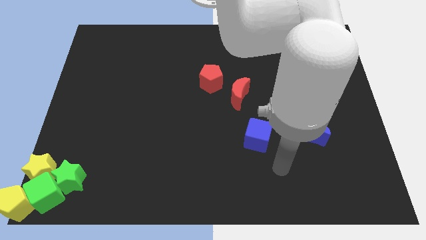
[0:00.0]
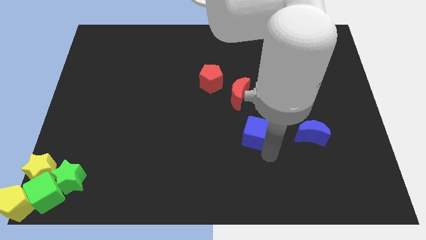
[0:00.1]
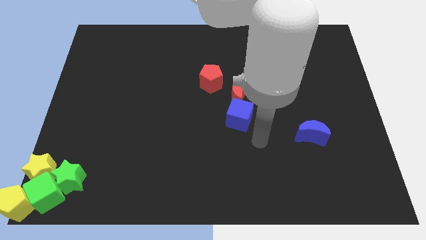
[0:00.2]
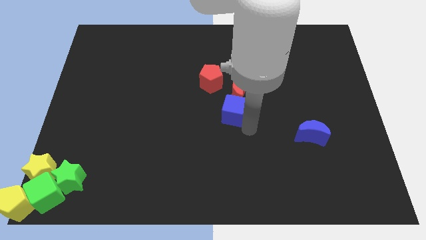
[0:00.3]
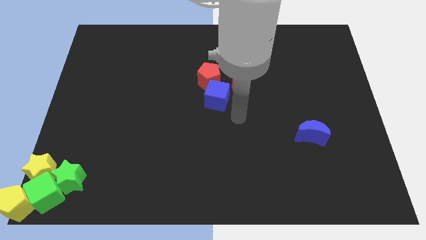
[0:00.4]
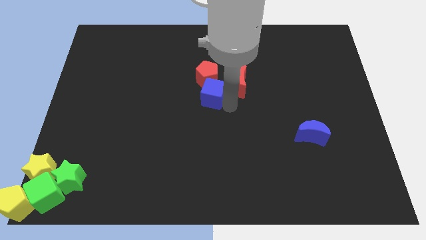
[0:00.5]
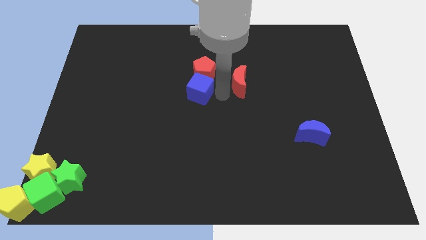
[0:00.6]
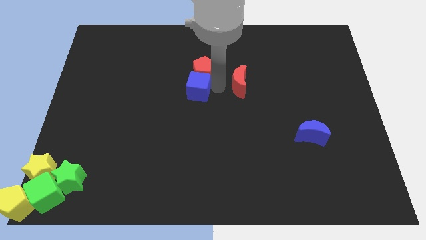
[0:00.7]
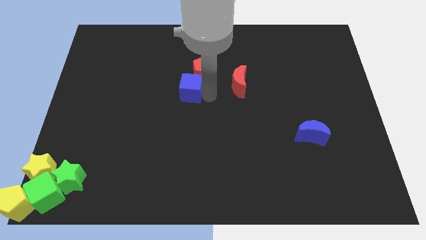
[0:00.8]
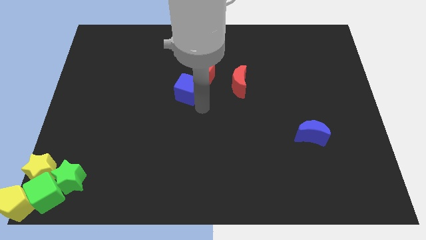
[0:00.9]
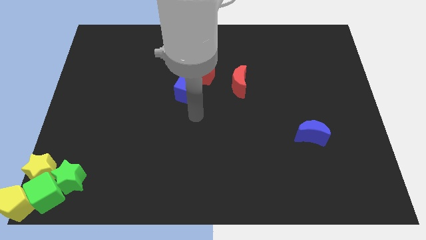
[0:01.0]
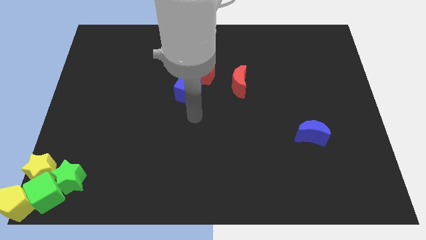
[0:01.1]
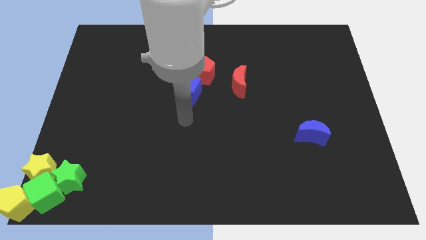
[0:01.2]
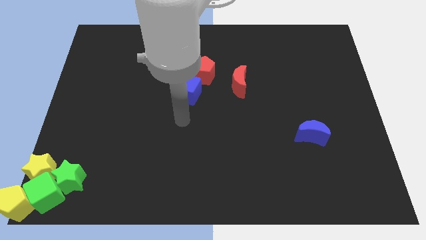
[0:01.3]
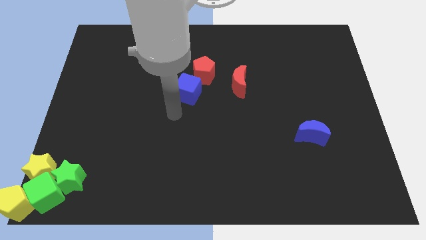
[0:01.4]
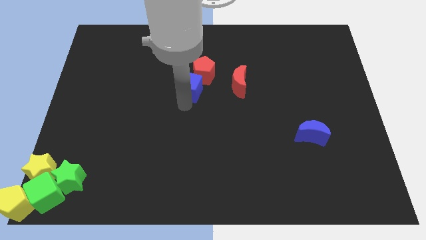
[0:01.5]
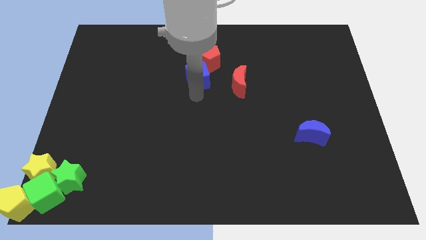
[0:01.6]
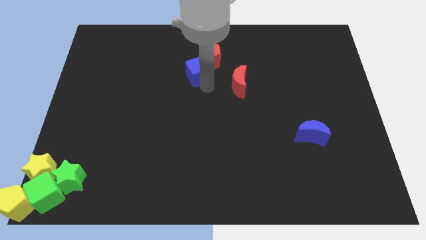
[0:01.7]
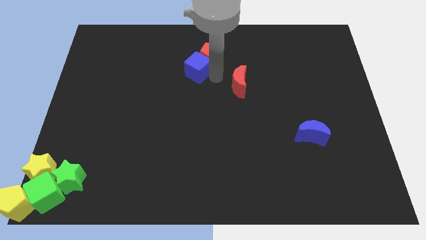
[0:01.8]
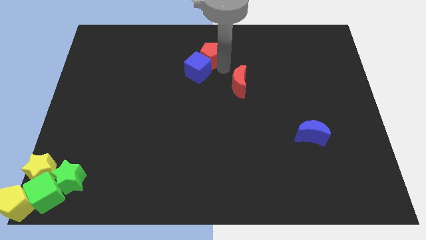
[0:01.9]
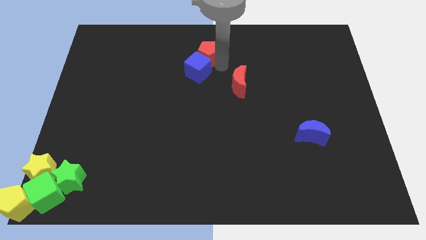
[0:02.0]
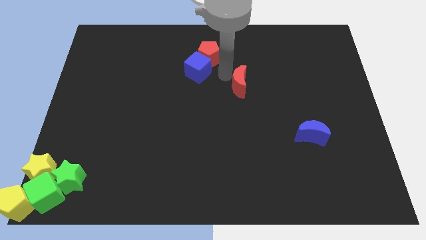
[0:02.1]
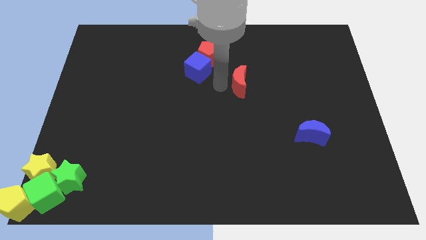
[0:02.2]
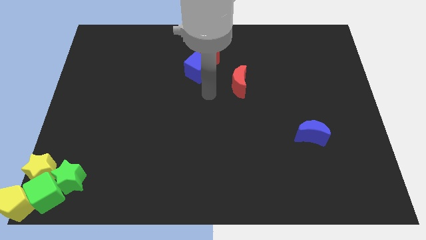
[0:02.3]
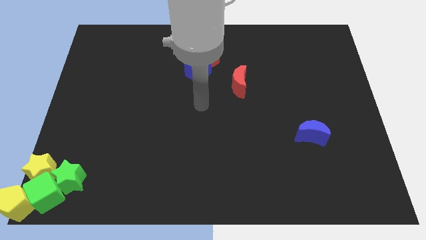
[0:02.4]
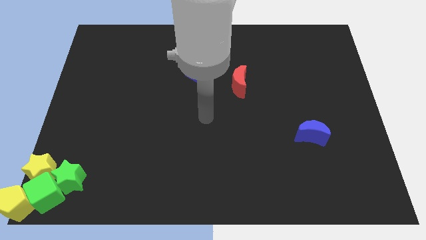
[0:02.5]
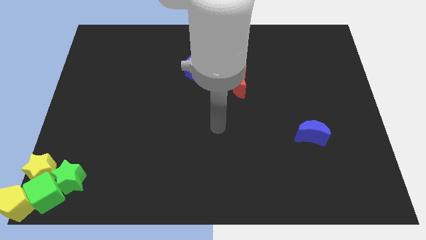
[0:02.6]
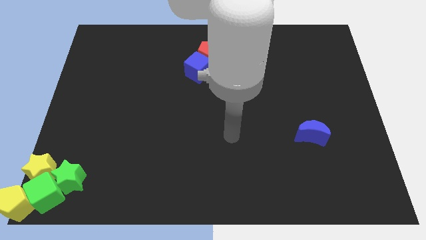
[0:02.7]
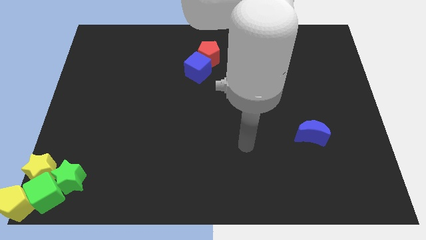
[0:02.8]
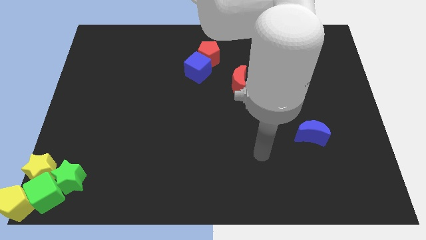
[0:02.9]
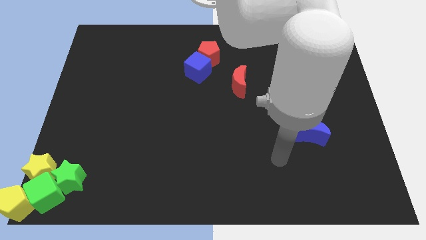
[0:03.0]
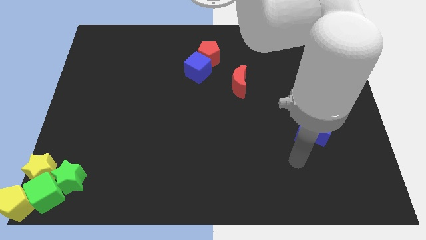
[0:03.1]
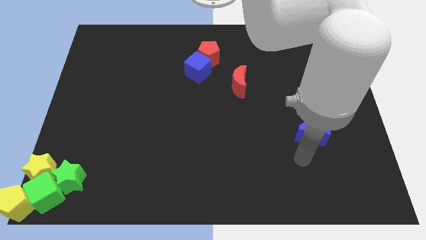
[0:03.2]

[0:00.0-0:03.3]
align blue cube and red pentagon towards top center

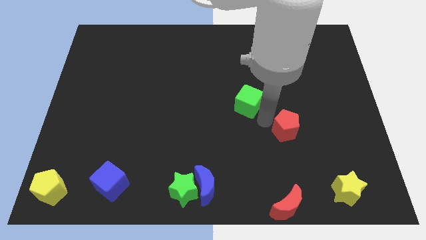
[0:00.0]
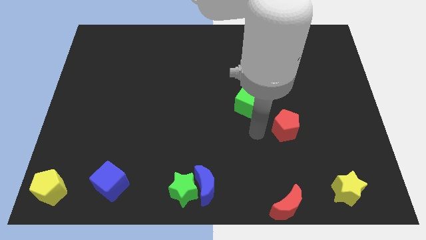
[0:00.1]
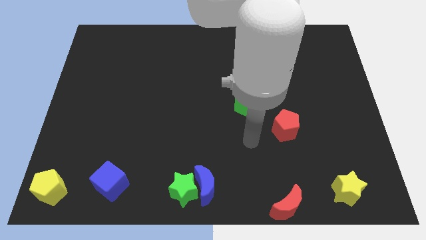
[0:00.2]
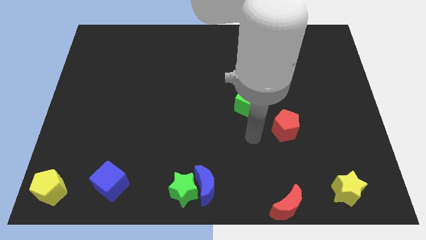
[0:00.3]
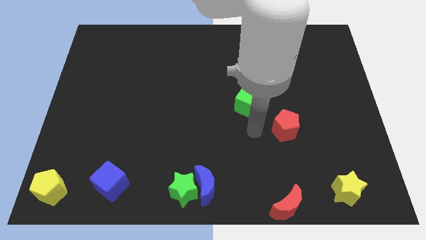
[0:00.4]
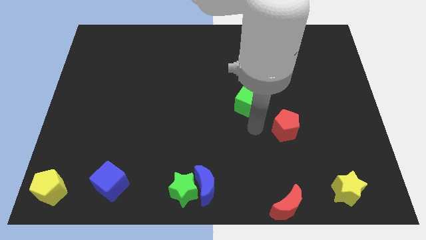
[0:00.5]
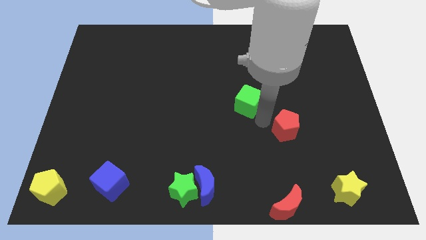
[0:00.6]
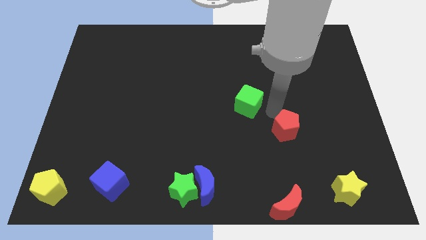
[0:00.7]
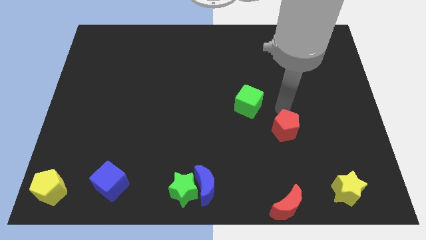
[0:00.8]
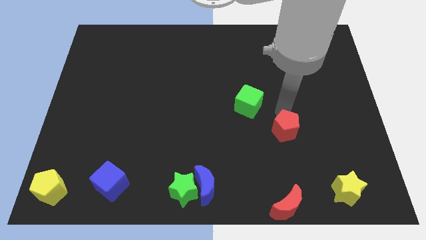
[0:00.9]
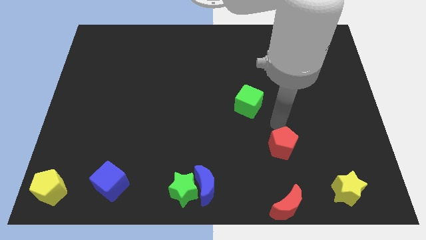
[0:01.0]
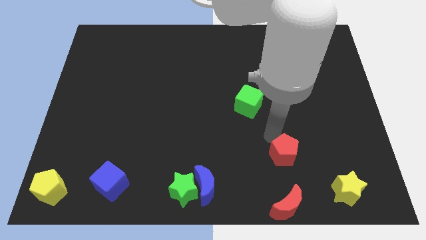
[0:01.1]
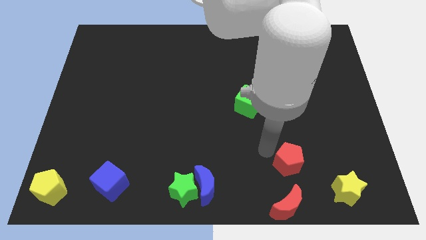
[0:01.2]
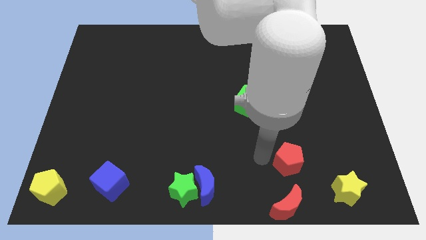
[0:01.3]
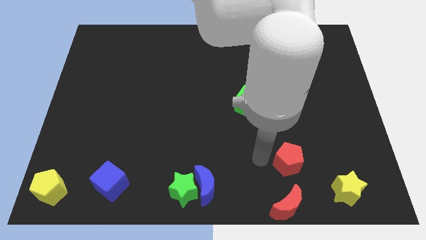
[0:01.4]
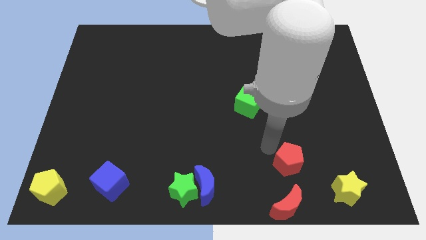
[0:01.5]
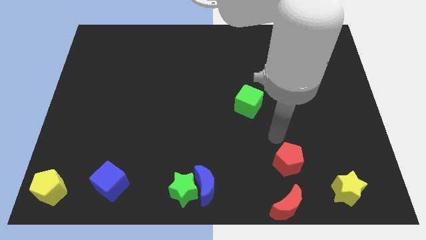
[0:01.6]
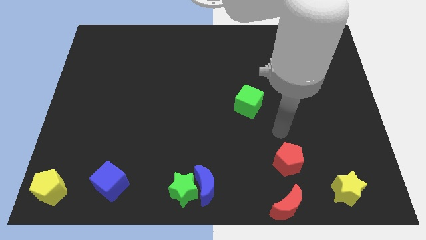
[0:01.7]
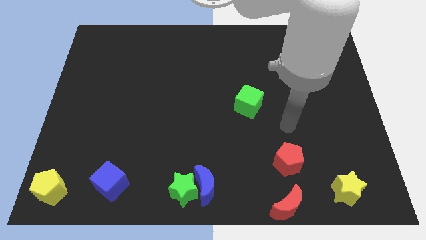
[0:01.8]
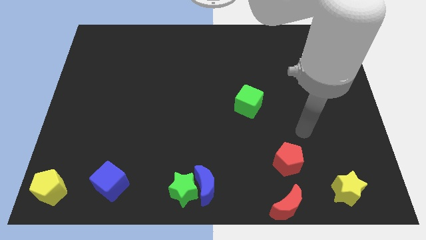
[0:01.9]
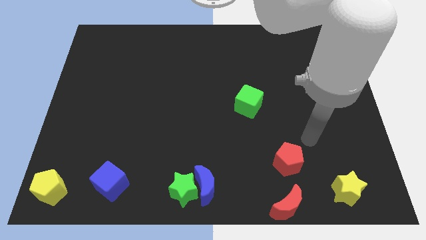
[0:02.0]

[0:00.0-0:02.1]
push red pentagon on top of red moon

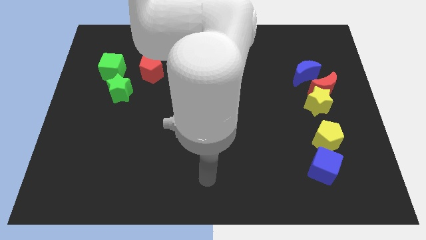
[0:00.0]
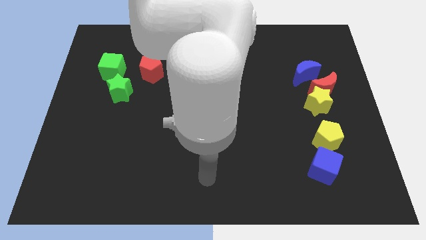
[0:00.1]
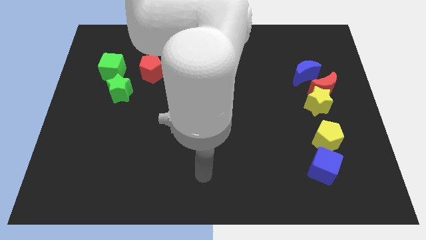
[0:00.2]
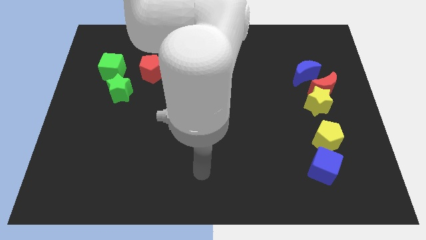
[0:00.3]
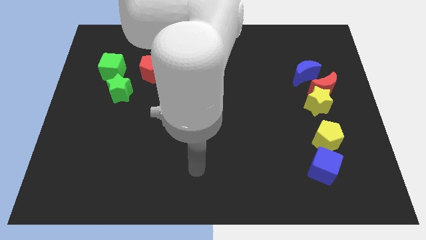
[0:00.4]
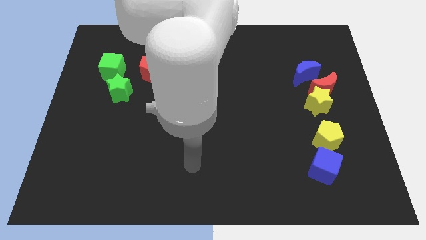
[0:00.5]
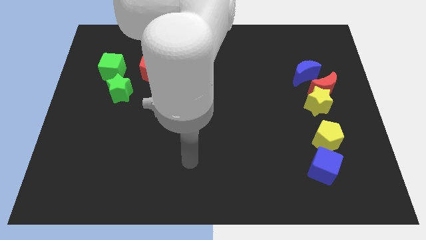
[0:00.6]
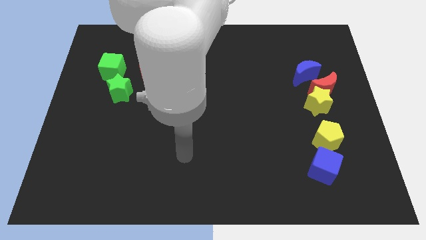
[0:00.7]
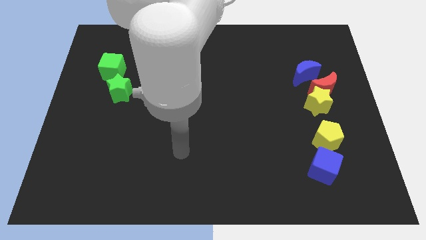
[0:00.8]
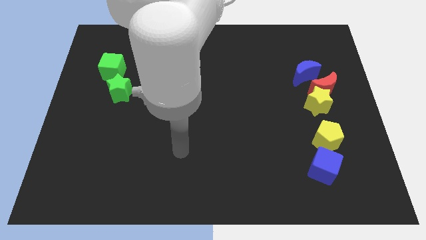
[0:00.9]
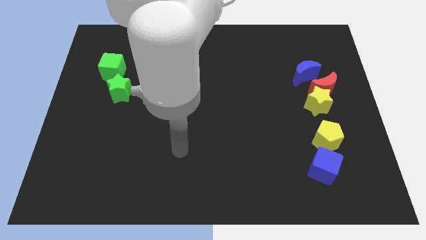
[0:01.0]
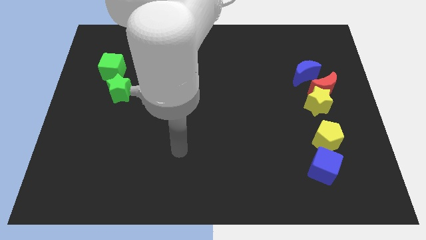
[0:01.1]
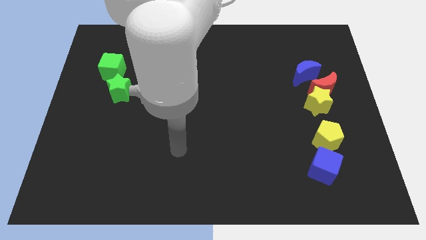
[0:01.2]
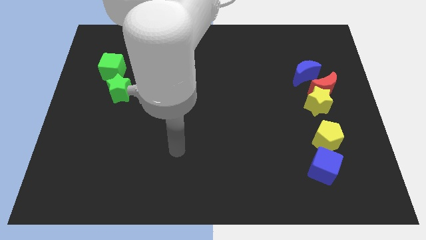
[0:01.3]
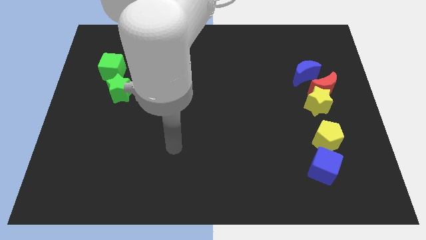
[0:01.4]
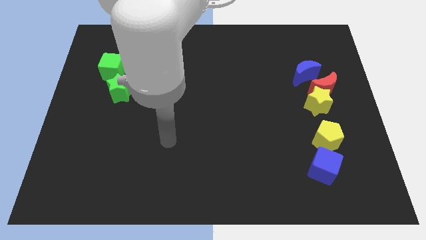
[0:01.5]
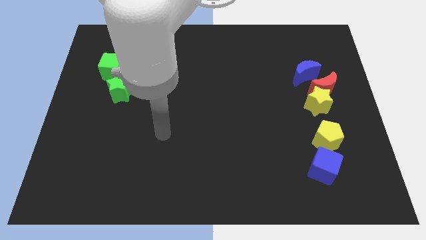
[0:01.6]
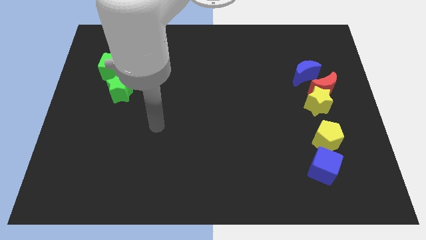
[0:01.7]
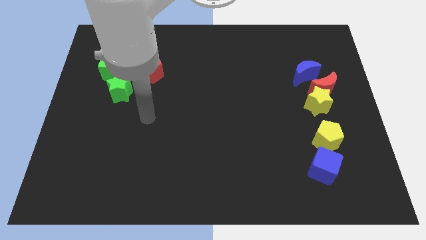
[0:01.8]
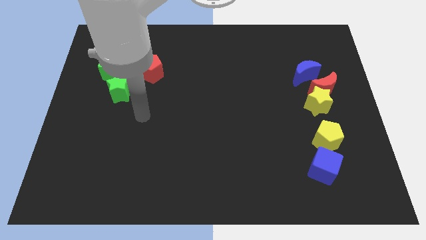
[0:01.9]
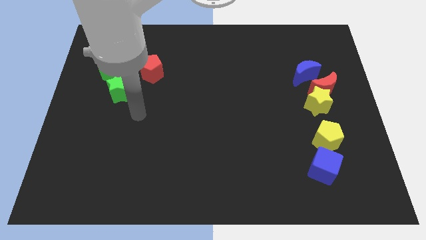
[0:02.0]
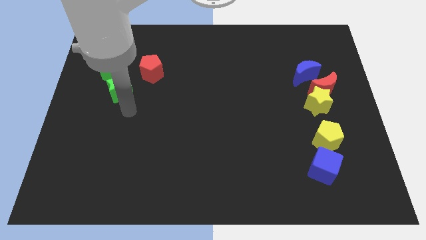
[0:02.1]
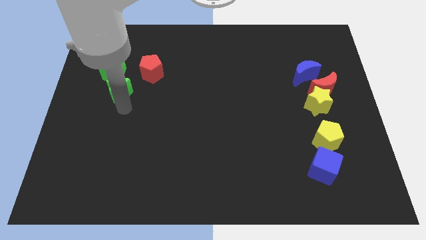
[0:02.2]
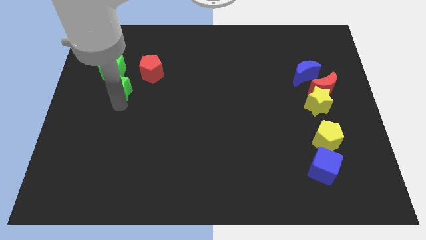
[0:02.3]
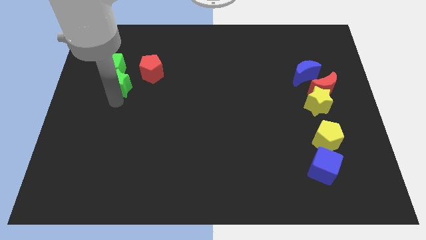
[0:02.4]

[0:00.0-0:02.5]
touch the green star with your arm

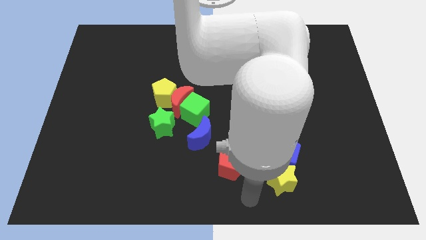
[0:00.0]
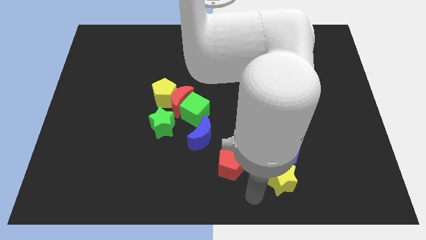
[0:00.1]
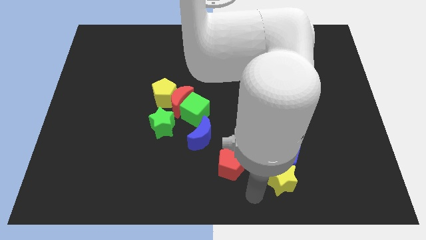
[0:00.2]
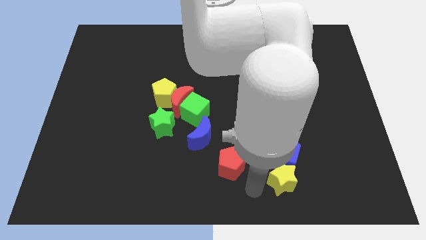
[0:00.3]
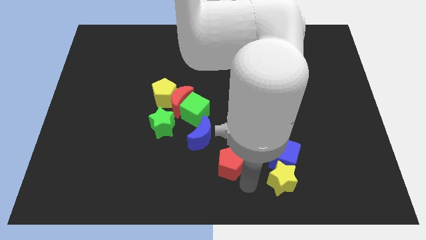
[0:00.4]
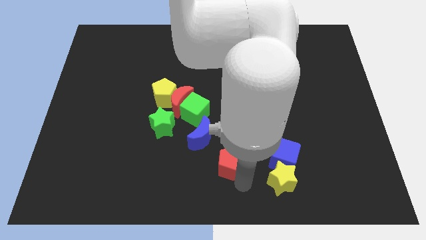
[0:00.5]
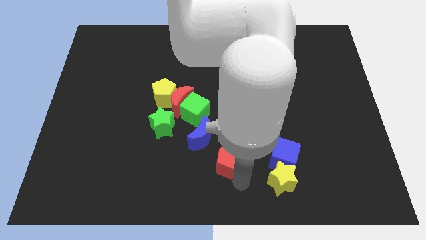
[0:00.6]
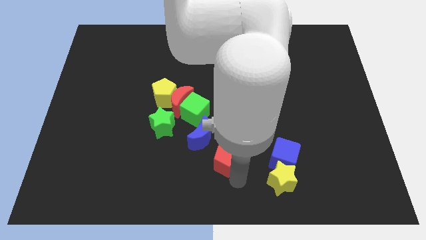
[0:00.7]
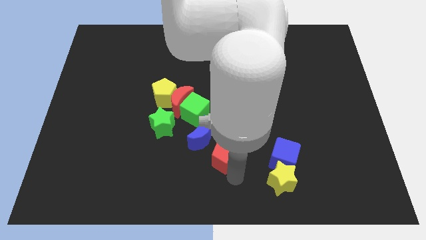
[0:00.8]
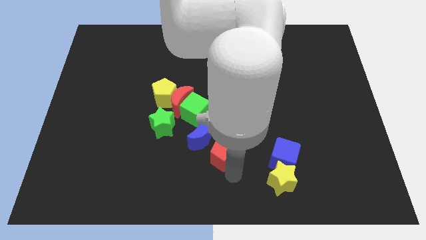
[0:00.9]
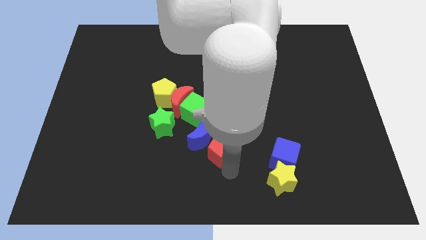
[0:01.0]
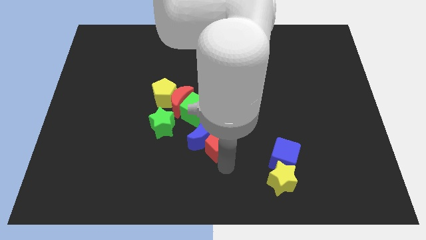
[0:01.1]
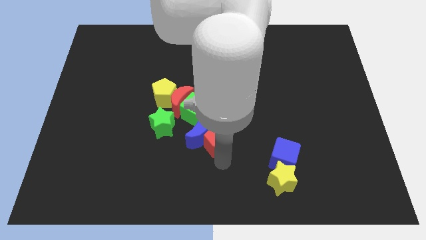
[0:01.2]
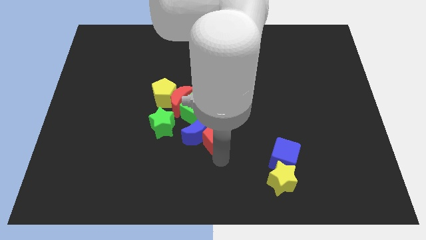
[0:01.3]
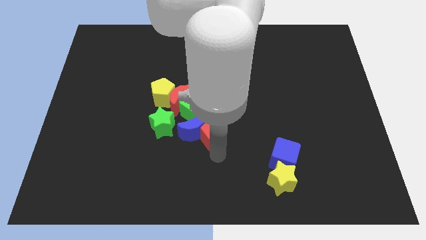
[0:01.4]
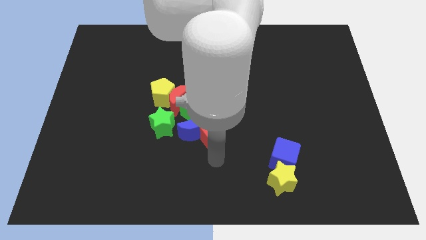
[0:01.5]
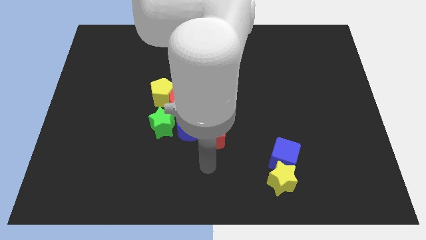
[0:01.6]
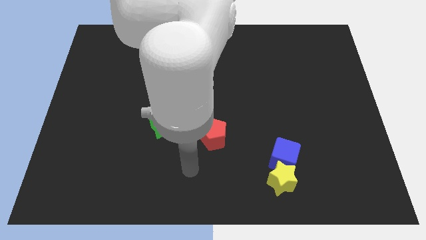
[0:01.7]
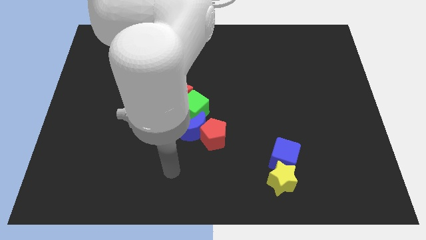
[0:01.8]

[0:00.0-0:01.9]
slide the red pentagon into the blue crescent
